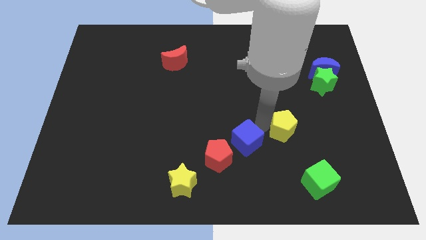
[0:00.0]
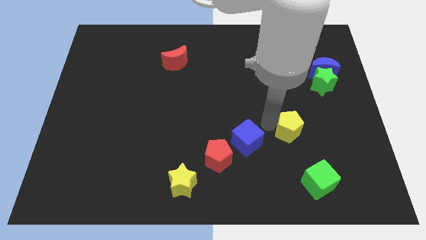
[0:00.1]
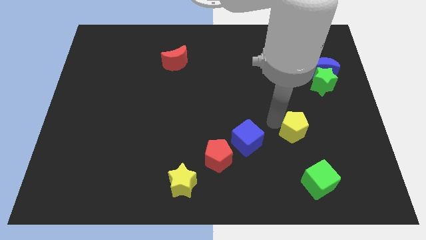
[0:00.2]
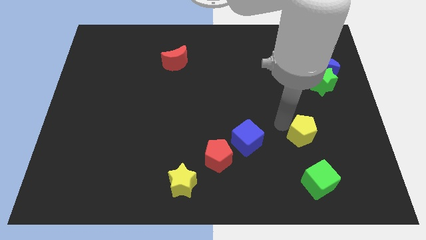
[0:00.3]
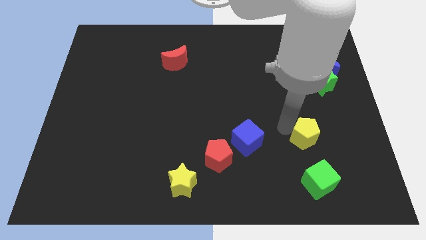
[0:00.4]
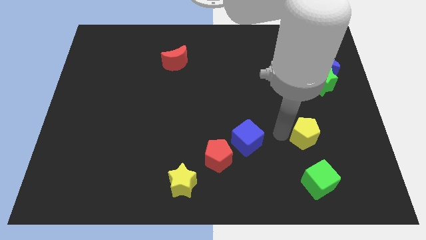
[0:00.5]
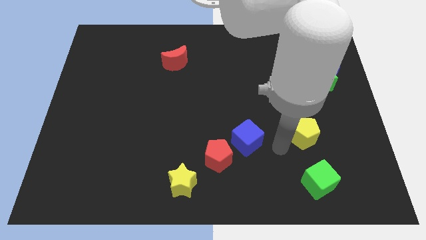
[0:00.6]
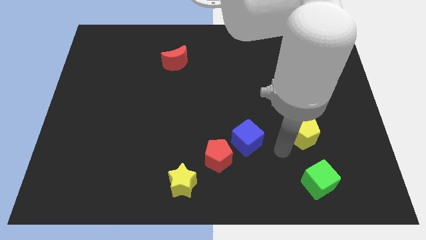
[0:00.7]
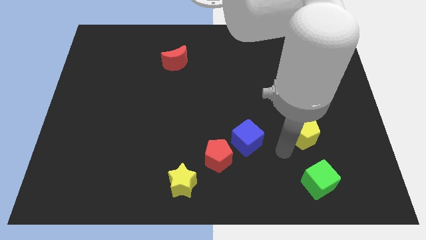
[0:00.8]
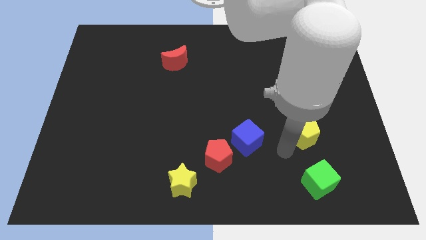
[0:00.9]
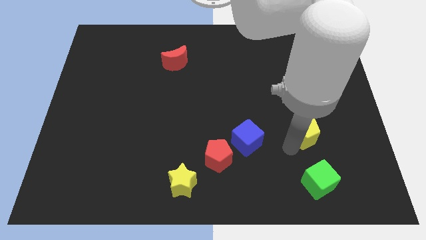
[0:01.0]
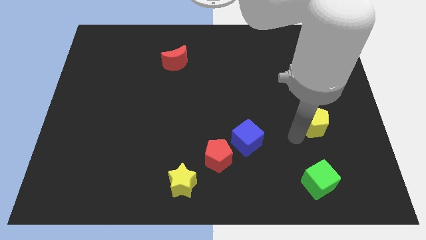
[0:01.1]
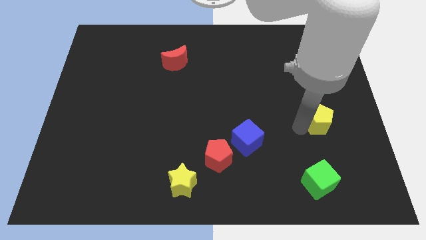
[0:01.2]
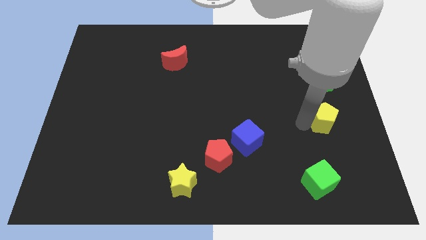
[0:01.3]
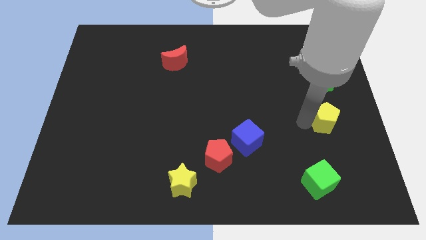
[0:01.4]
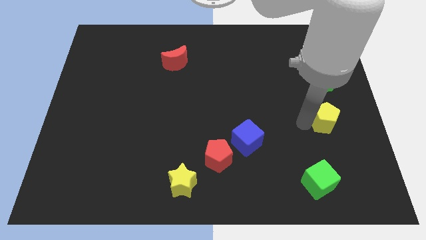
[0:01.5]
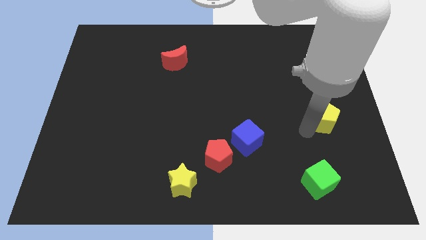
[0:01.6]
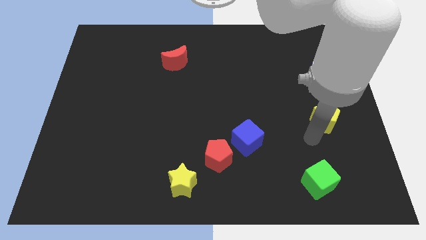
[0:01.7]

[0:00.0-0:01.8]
slide the yellow pentagon vertically to the green star

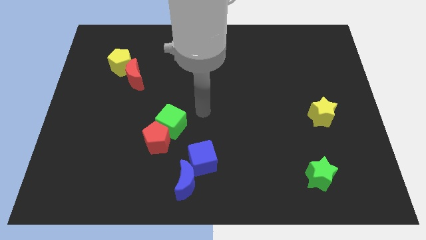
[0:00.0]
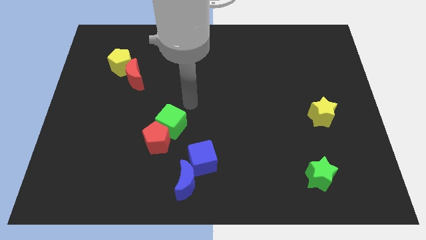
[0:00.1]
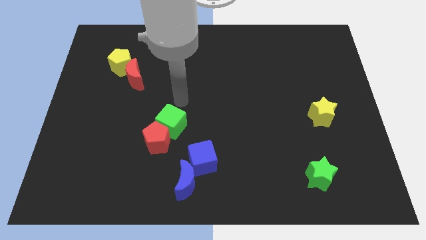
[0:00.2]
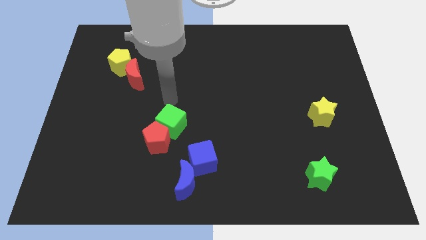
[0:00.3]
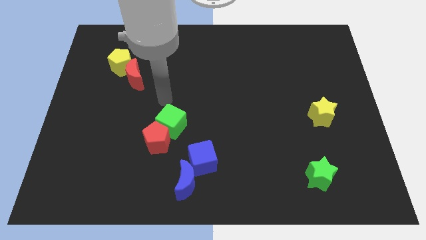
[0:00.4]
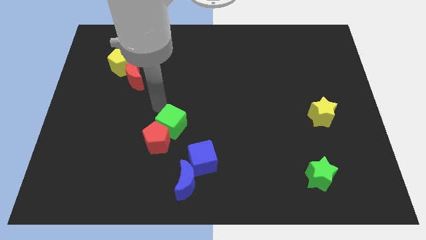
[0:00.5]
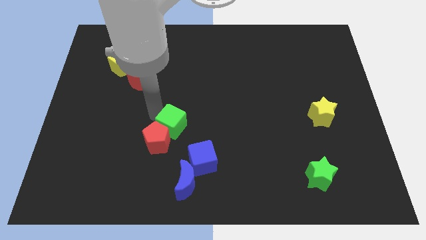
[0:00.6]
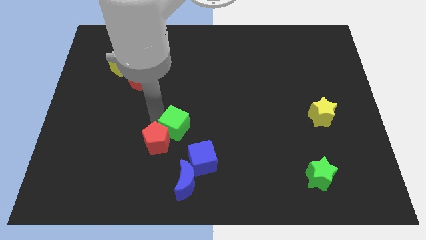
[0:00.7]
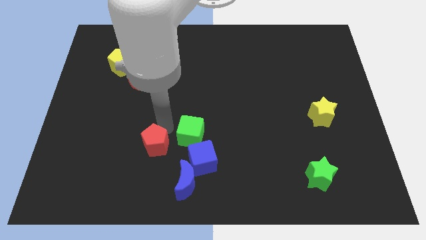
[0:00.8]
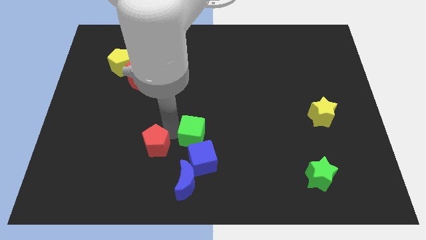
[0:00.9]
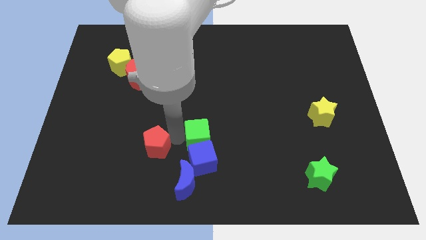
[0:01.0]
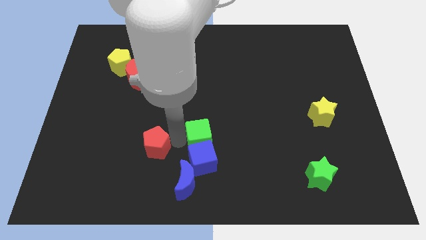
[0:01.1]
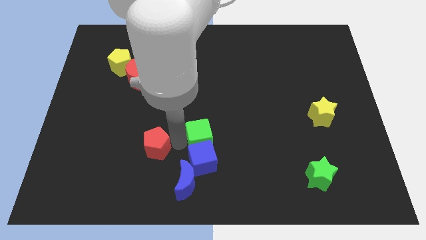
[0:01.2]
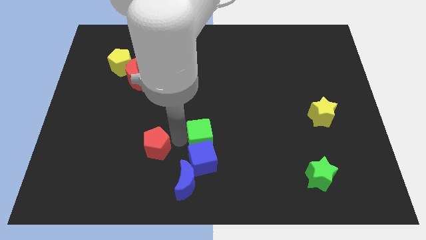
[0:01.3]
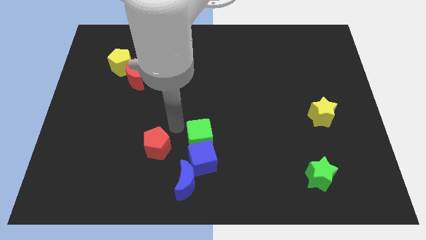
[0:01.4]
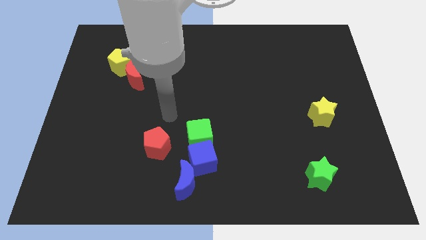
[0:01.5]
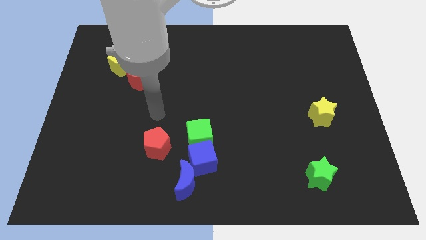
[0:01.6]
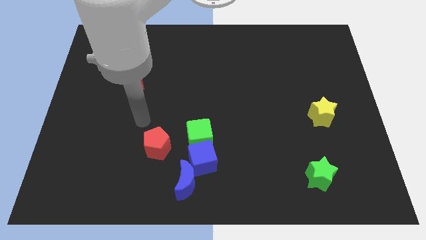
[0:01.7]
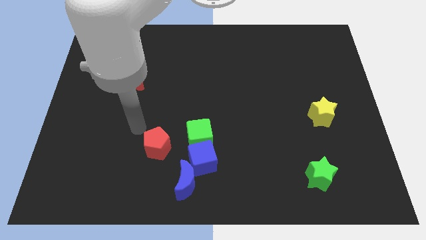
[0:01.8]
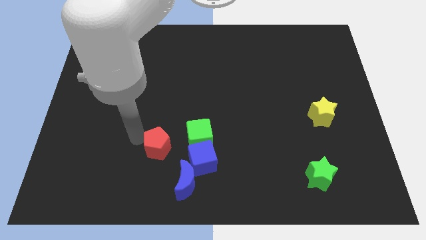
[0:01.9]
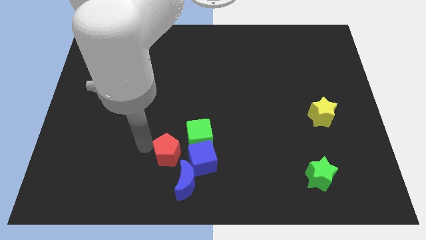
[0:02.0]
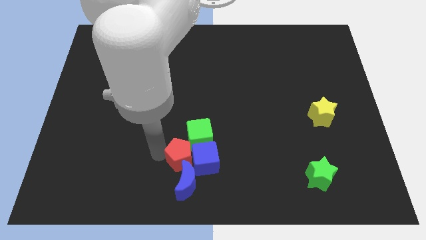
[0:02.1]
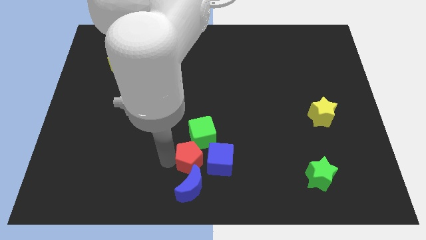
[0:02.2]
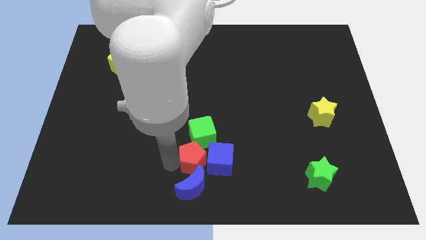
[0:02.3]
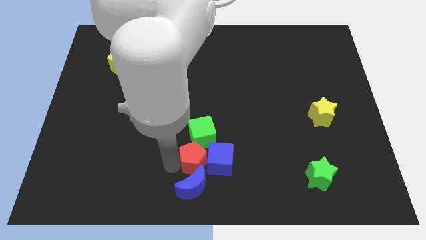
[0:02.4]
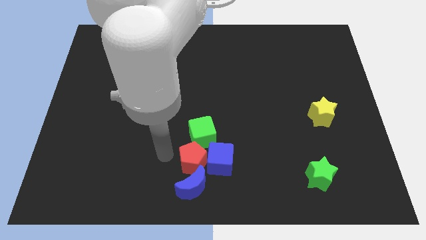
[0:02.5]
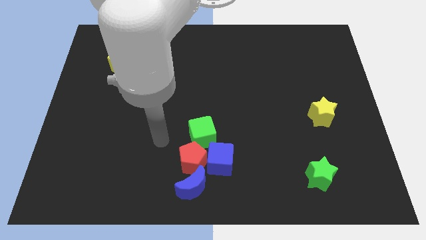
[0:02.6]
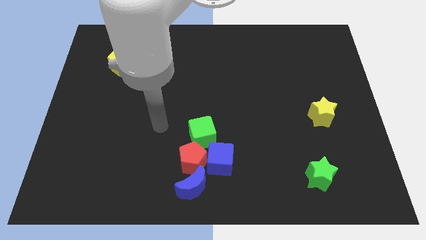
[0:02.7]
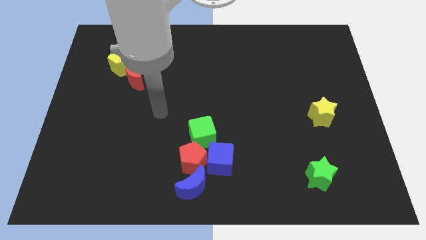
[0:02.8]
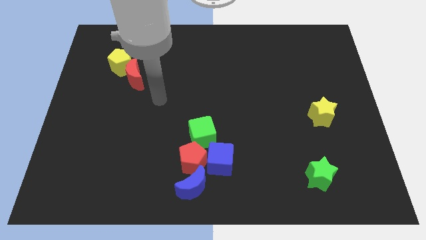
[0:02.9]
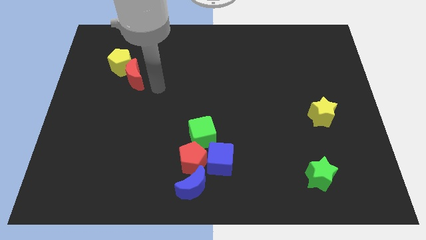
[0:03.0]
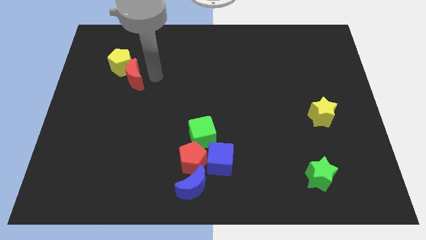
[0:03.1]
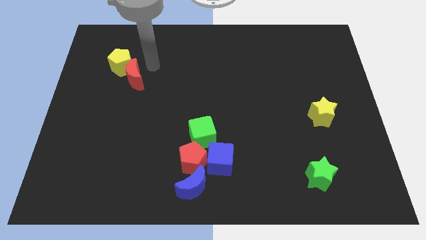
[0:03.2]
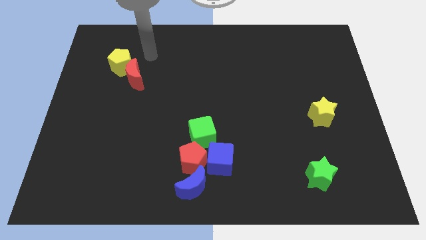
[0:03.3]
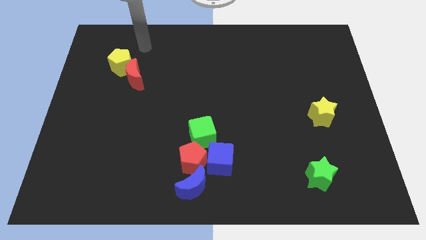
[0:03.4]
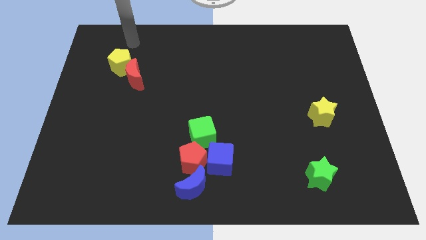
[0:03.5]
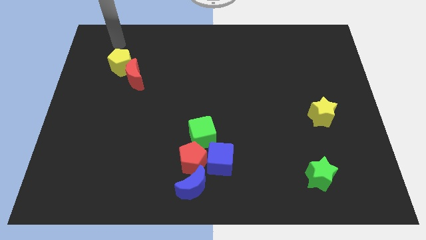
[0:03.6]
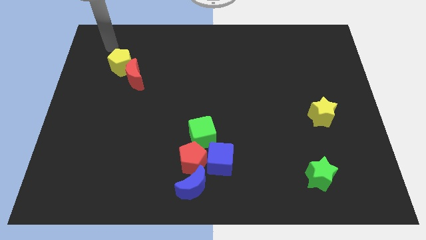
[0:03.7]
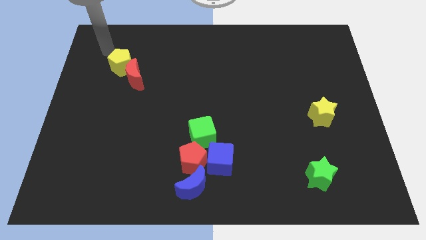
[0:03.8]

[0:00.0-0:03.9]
move the red pentagon and the green cube into the blue blocks

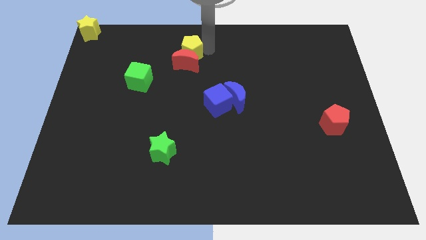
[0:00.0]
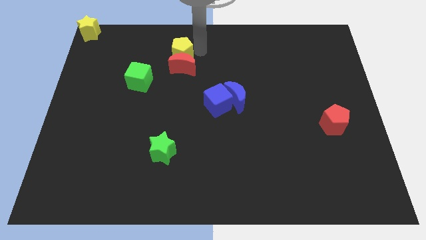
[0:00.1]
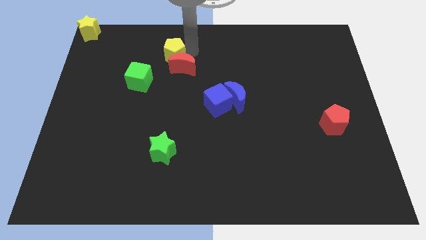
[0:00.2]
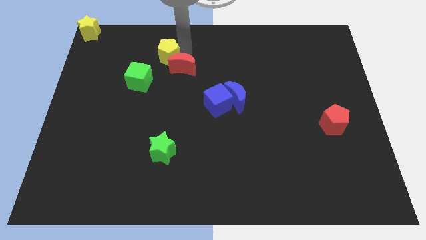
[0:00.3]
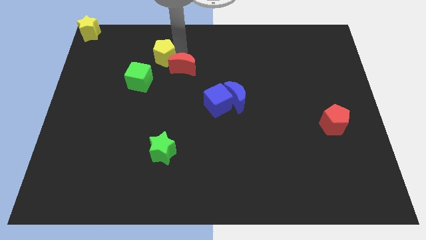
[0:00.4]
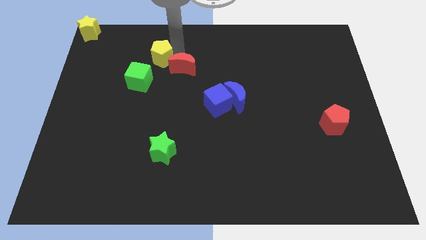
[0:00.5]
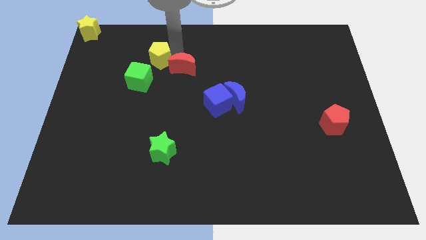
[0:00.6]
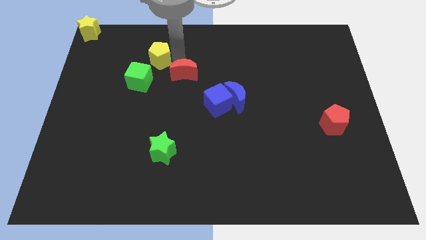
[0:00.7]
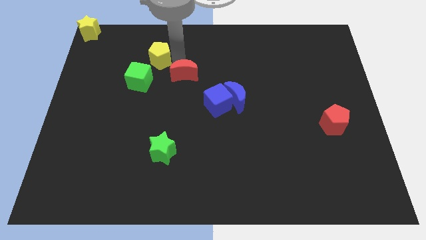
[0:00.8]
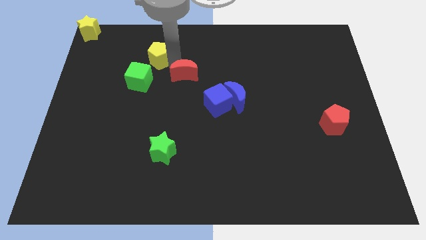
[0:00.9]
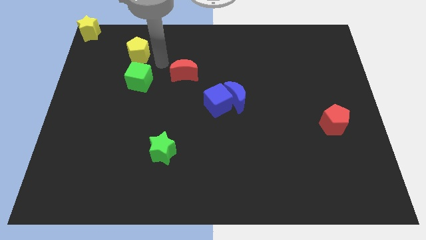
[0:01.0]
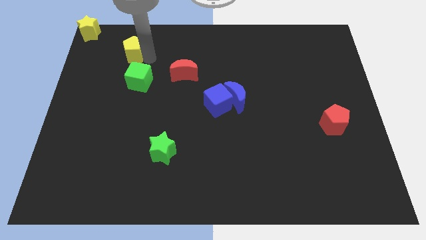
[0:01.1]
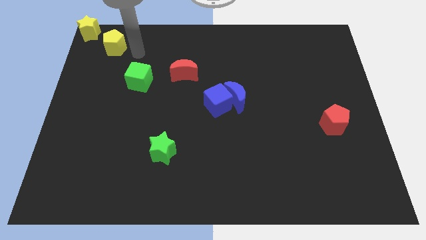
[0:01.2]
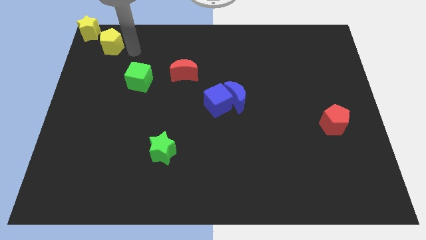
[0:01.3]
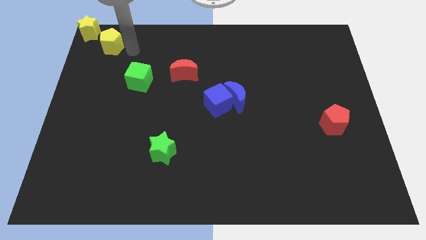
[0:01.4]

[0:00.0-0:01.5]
move yellow pentagon diagonally below the yellow star

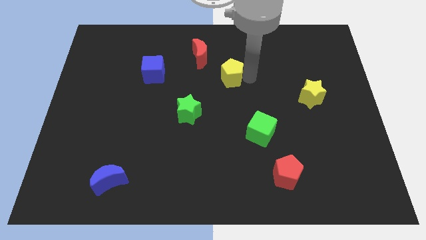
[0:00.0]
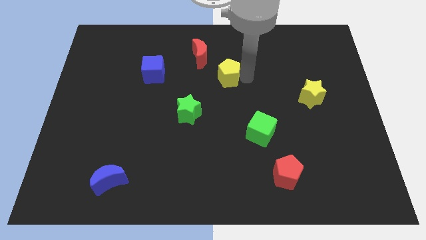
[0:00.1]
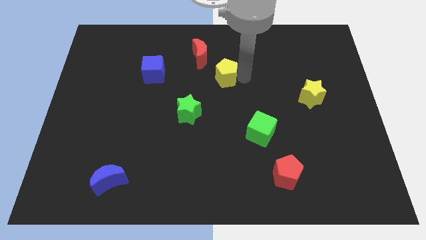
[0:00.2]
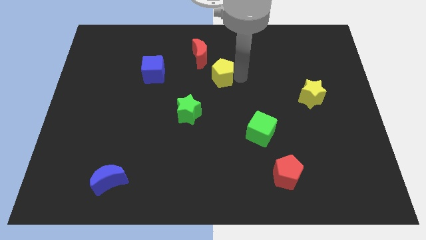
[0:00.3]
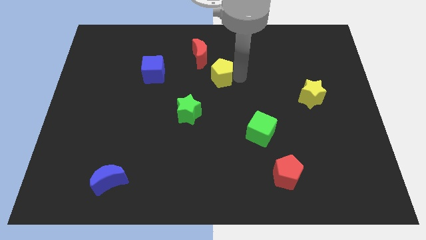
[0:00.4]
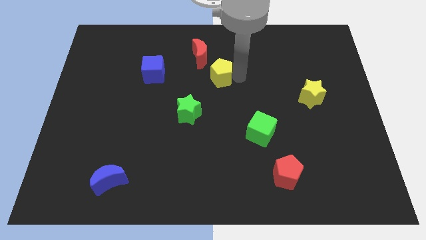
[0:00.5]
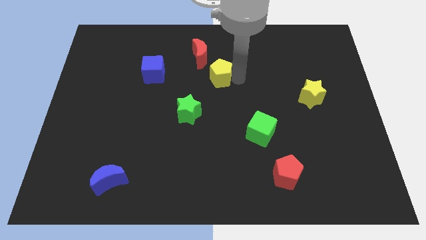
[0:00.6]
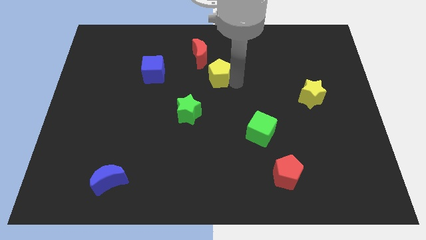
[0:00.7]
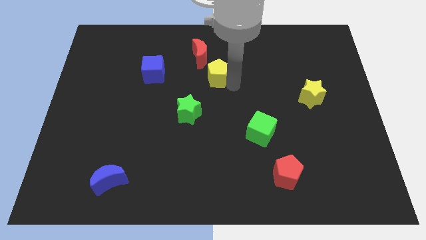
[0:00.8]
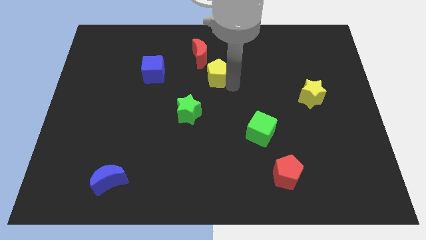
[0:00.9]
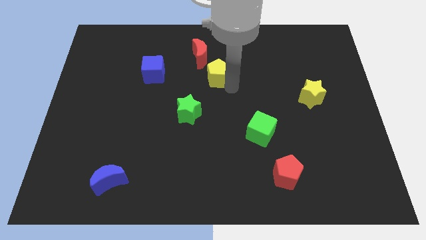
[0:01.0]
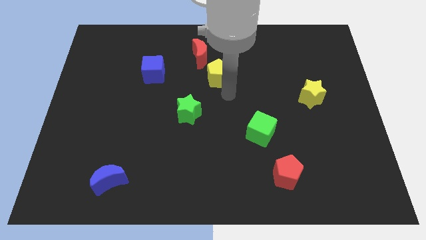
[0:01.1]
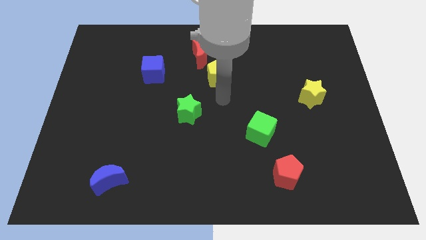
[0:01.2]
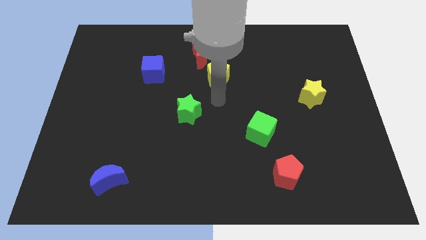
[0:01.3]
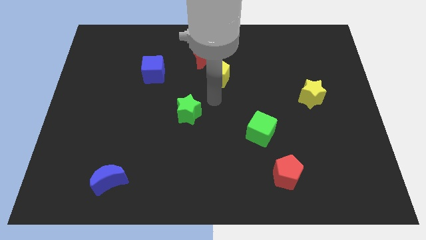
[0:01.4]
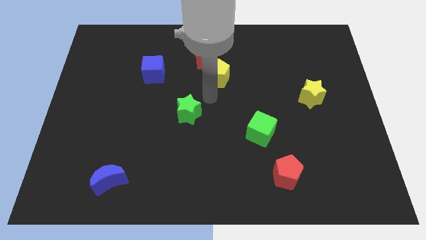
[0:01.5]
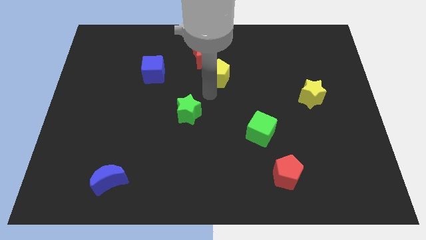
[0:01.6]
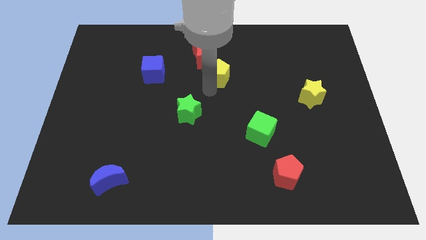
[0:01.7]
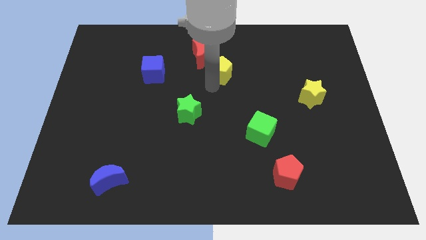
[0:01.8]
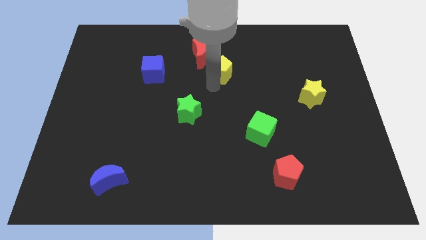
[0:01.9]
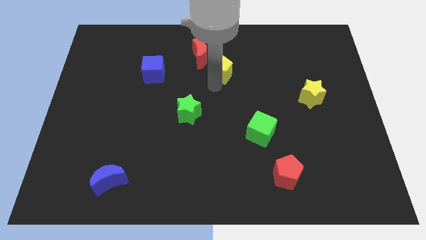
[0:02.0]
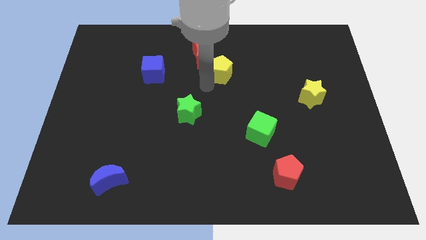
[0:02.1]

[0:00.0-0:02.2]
push yellow pentagon to the bottom right of red moon
